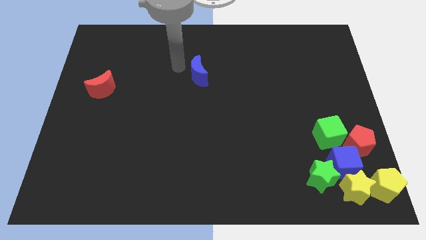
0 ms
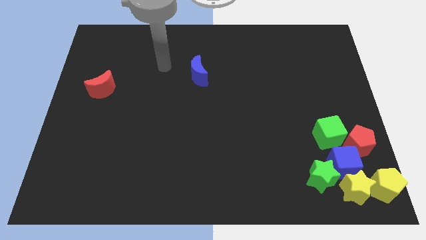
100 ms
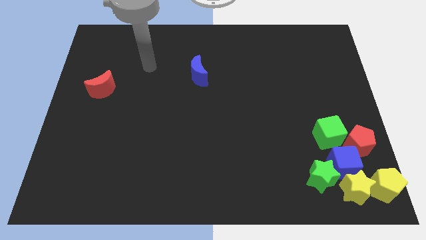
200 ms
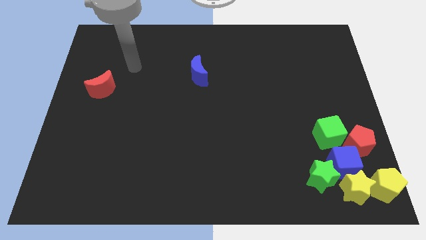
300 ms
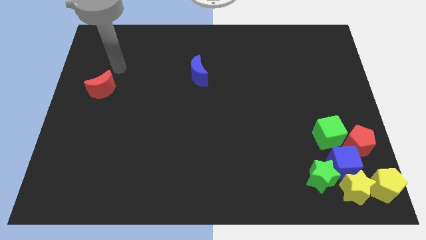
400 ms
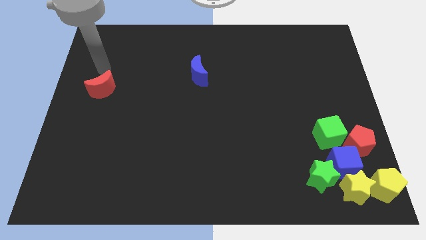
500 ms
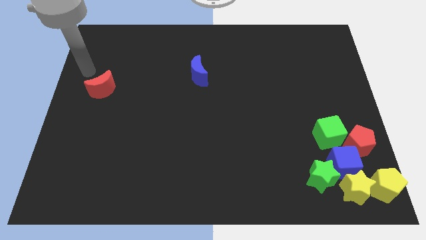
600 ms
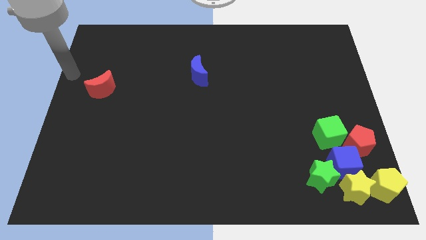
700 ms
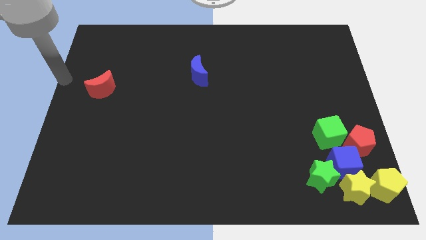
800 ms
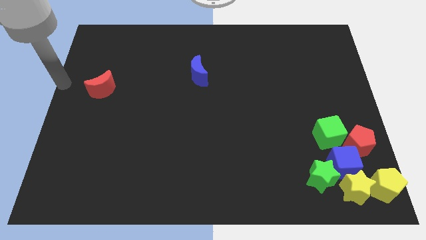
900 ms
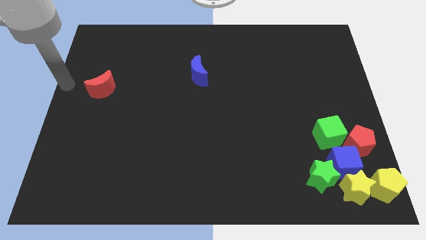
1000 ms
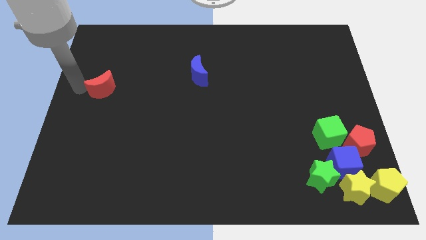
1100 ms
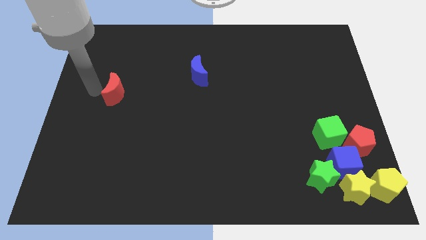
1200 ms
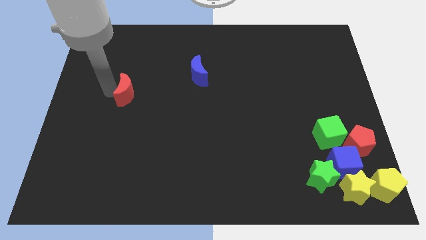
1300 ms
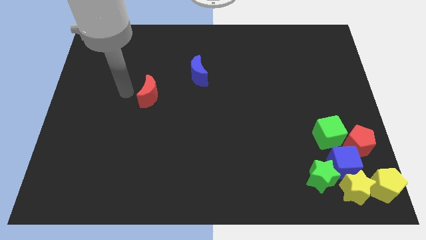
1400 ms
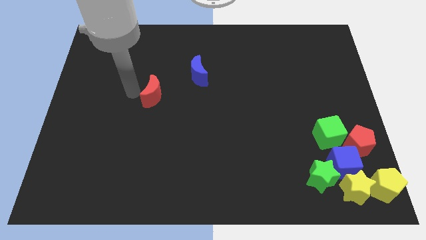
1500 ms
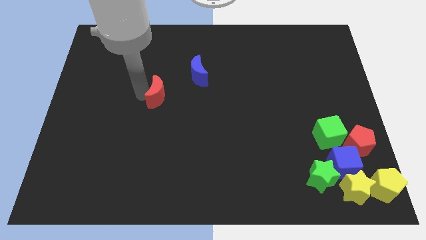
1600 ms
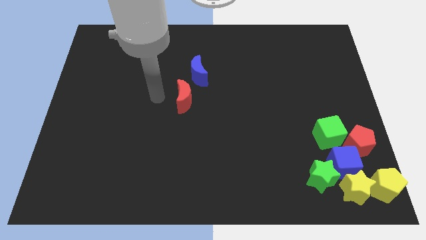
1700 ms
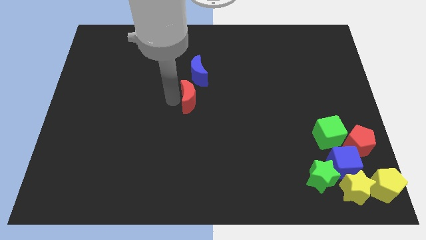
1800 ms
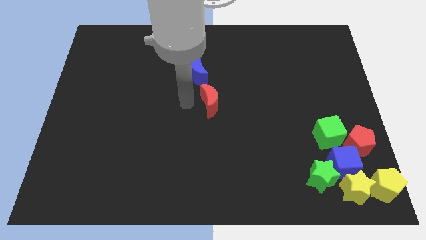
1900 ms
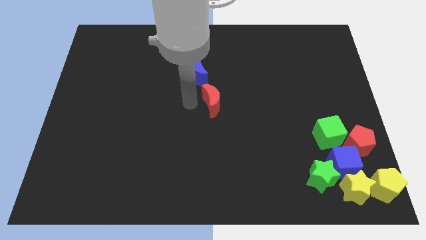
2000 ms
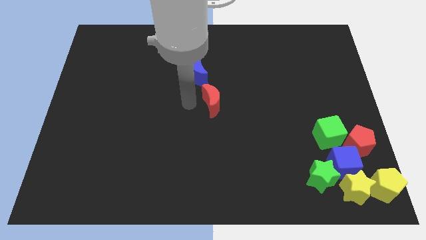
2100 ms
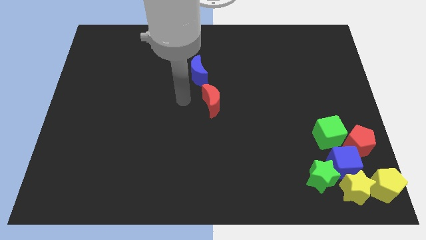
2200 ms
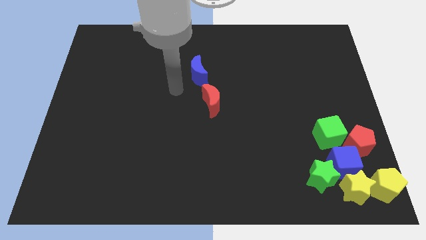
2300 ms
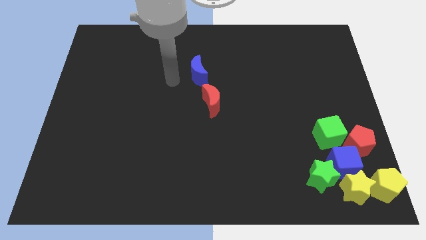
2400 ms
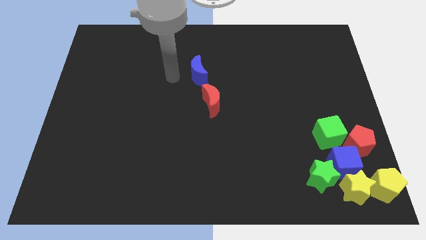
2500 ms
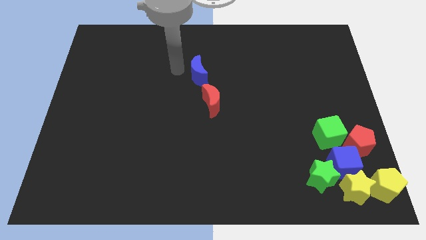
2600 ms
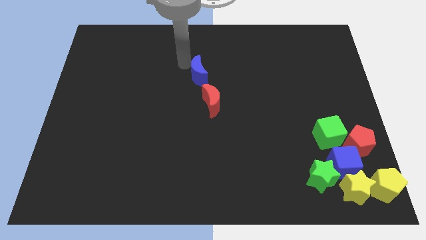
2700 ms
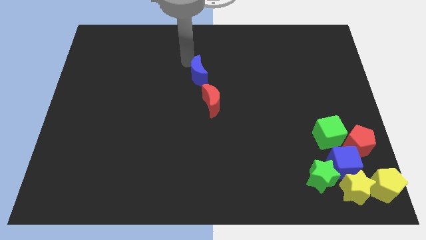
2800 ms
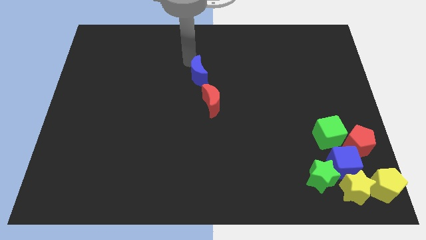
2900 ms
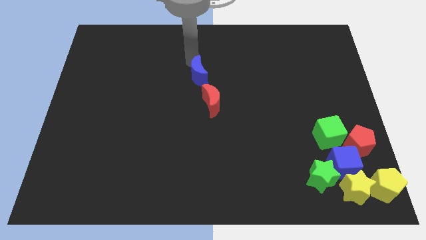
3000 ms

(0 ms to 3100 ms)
place the red crescent below the blue crescent

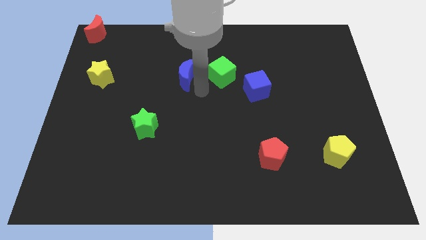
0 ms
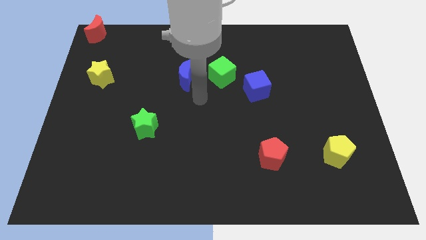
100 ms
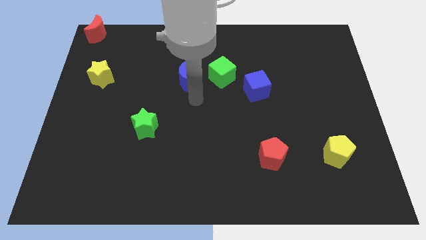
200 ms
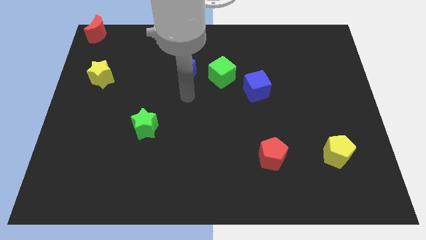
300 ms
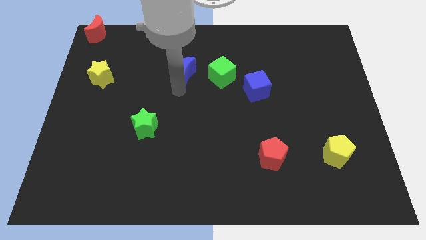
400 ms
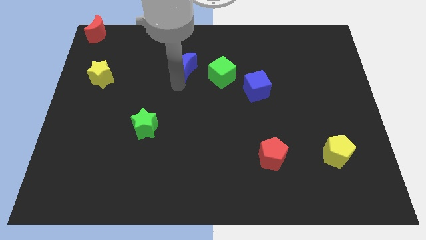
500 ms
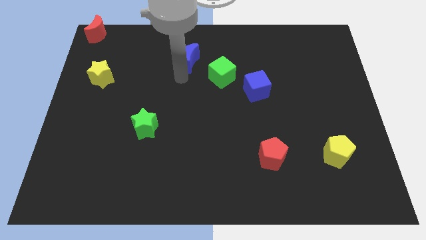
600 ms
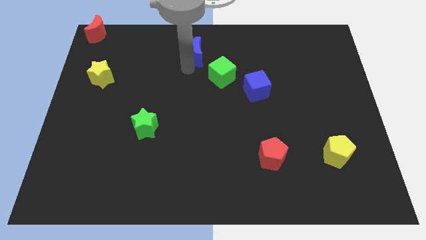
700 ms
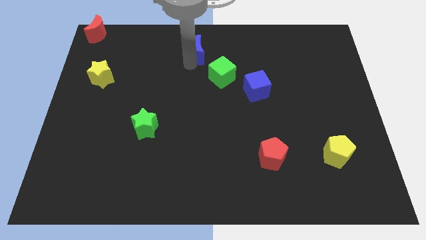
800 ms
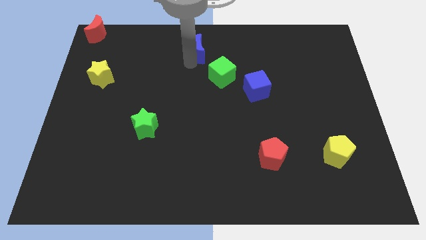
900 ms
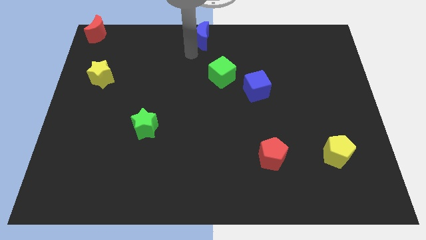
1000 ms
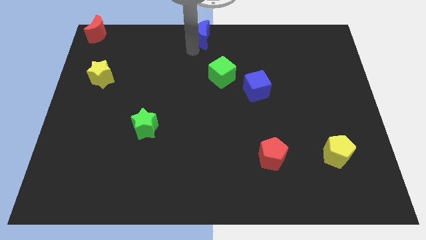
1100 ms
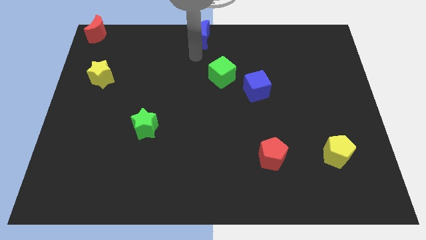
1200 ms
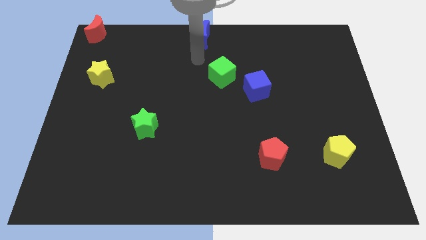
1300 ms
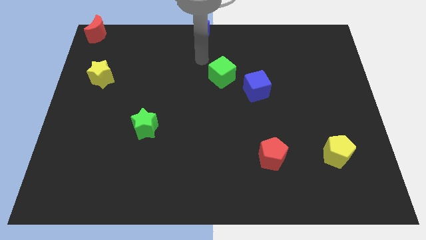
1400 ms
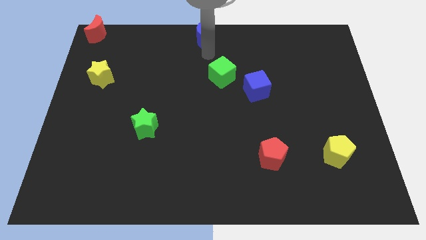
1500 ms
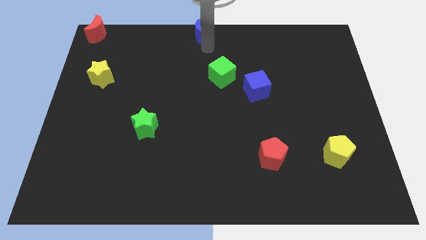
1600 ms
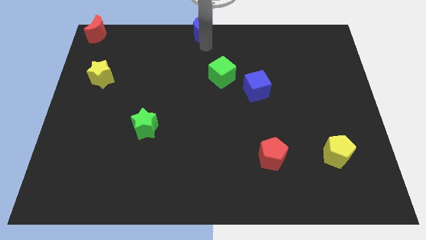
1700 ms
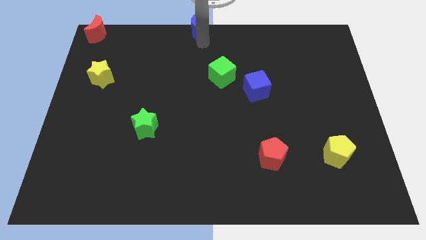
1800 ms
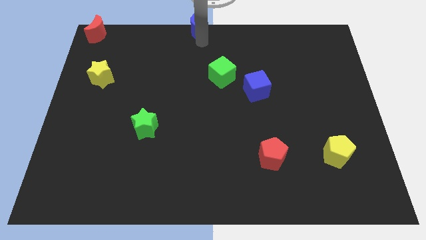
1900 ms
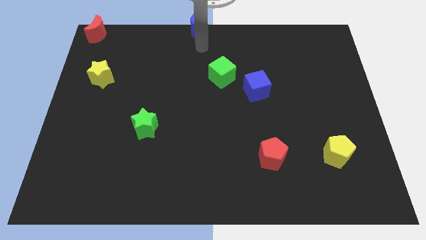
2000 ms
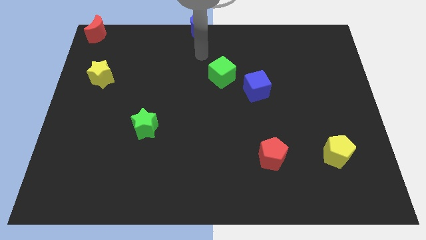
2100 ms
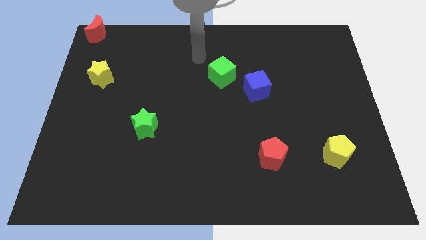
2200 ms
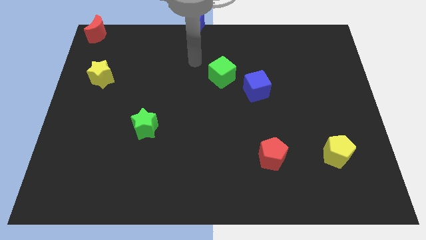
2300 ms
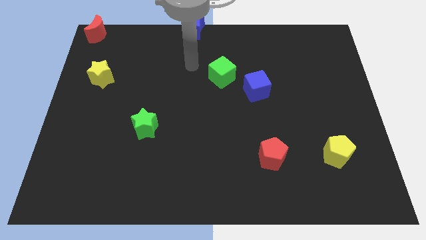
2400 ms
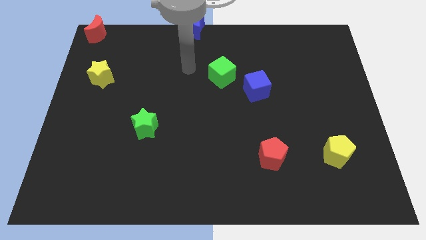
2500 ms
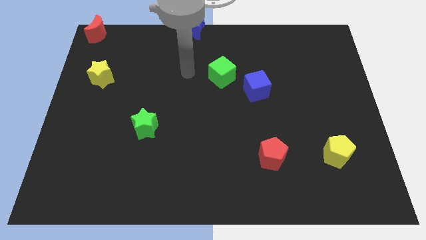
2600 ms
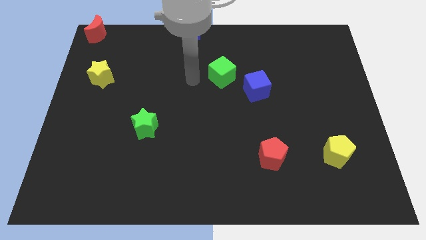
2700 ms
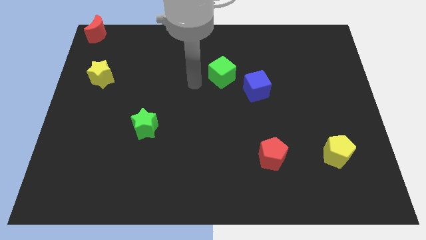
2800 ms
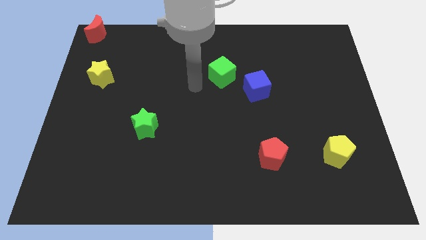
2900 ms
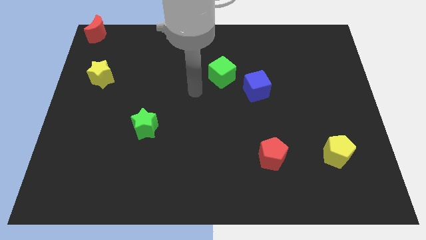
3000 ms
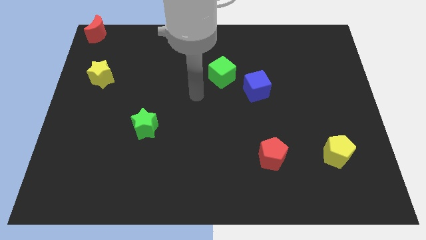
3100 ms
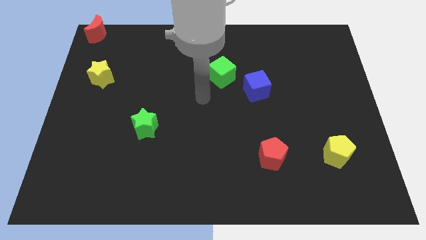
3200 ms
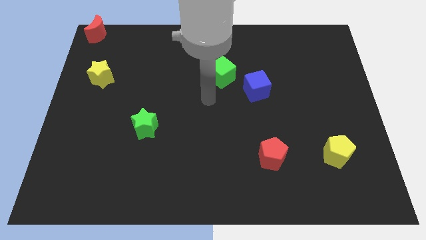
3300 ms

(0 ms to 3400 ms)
place blue moon to the top

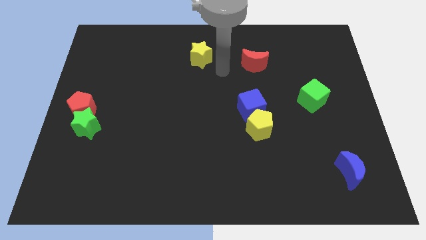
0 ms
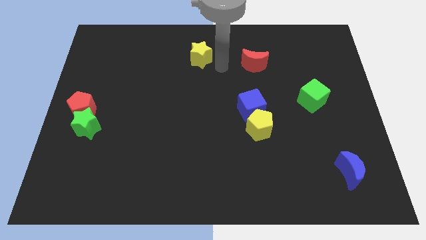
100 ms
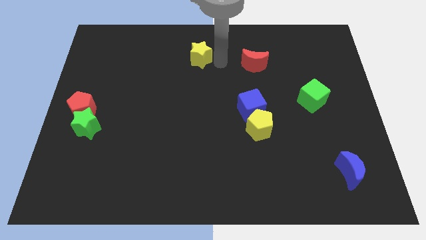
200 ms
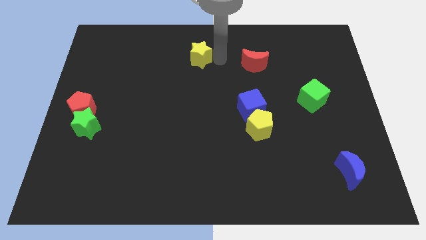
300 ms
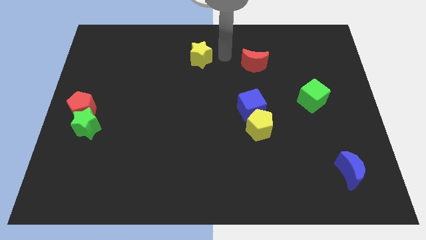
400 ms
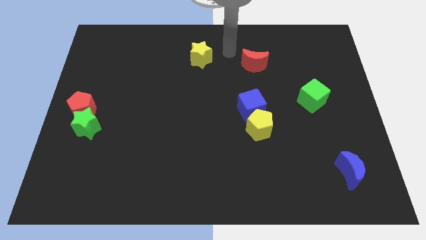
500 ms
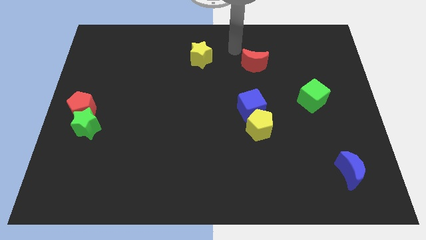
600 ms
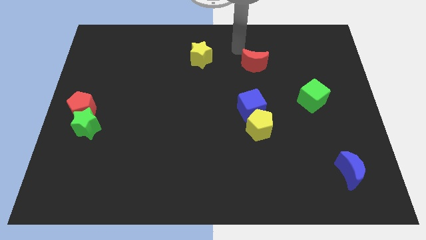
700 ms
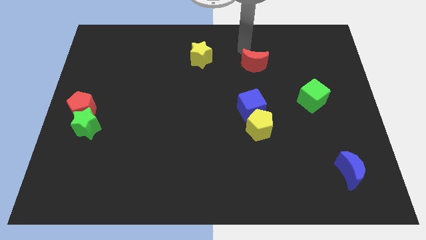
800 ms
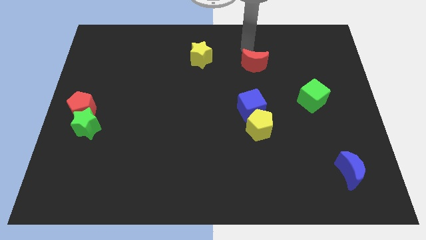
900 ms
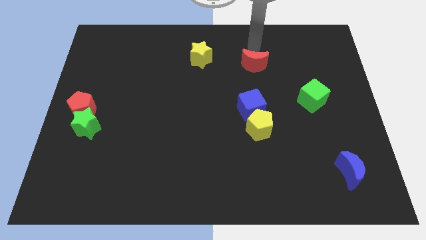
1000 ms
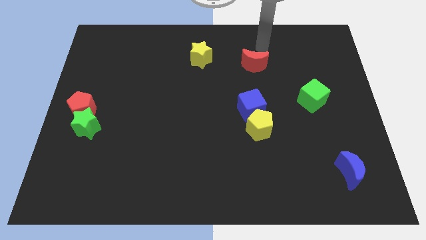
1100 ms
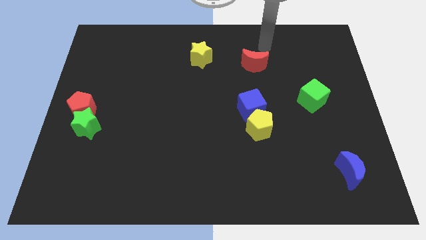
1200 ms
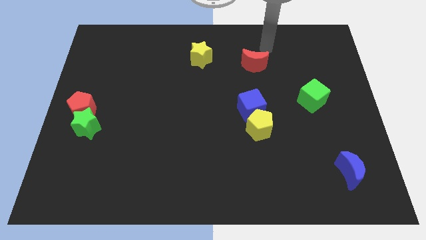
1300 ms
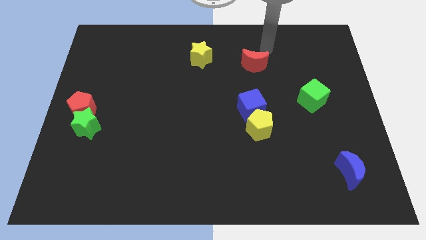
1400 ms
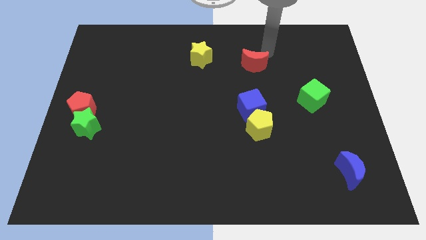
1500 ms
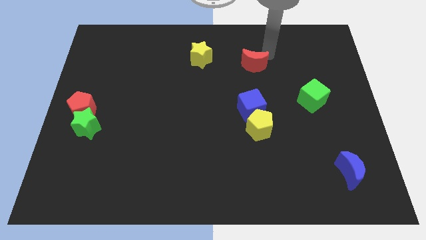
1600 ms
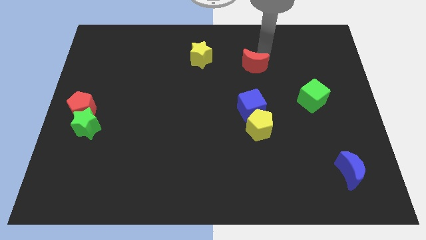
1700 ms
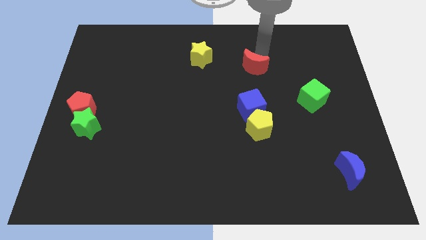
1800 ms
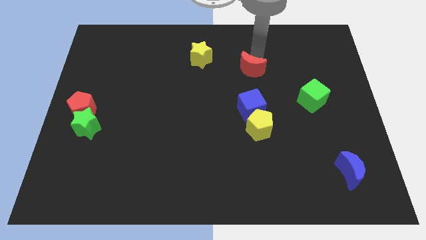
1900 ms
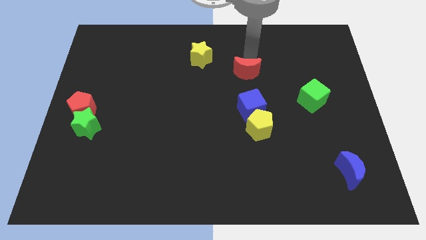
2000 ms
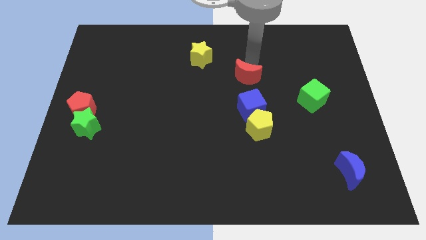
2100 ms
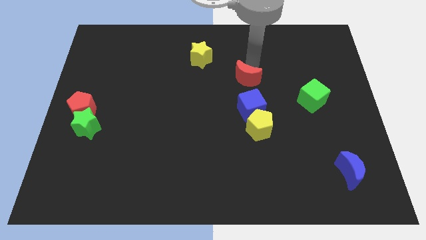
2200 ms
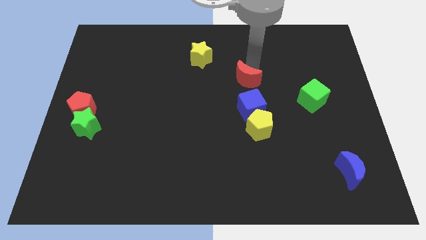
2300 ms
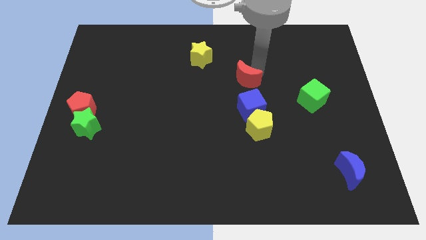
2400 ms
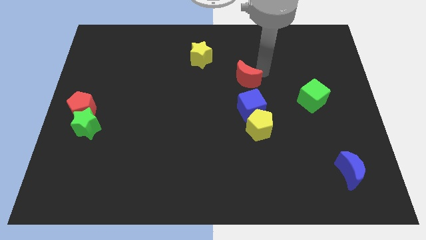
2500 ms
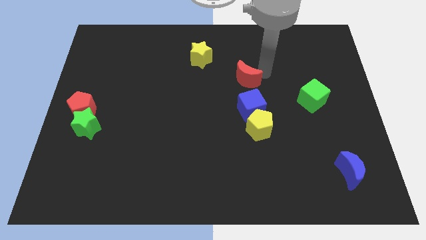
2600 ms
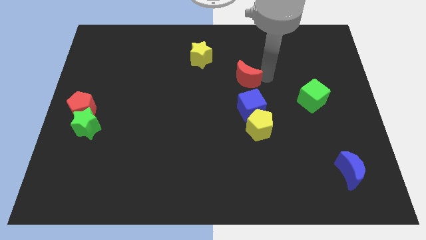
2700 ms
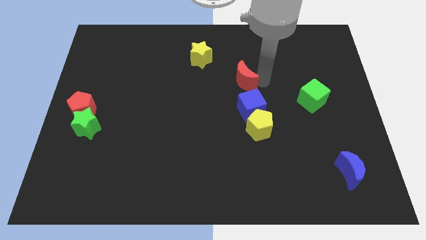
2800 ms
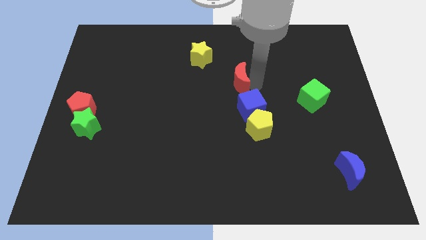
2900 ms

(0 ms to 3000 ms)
push red crescent above blue cube
